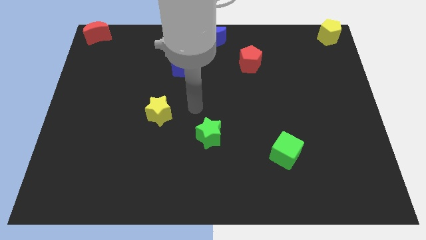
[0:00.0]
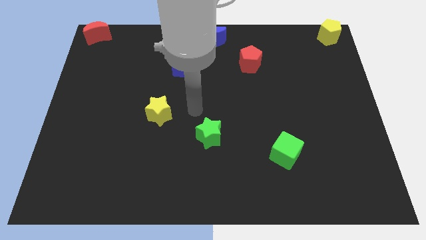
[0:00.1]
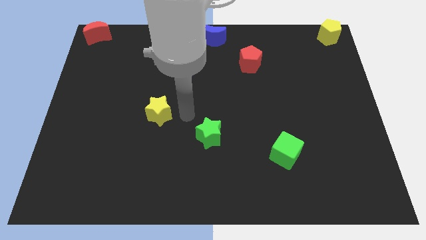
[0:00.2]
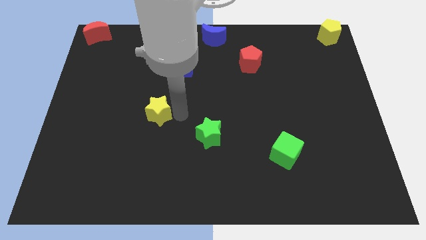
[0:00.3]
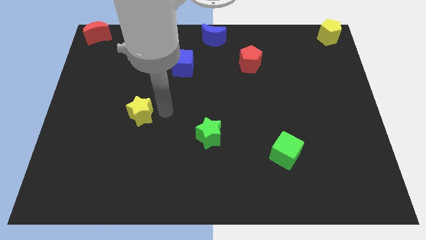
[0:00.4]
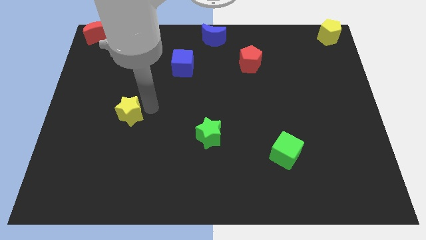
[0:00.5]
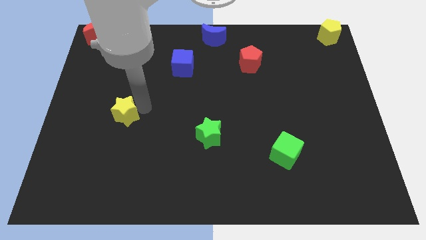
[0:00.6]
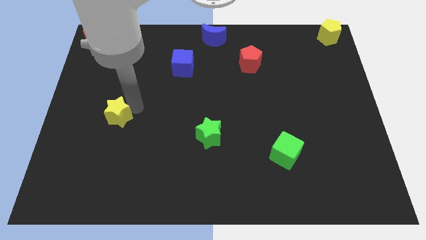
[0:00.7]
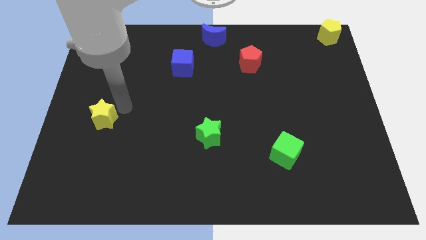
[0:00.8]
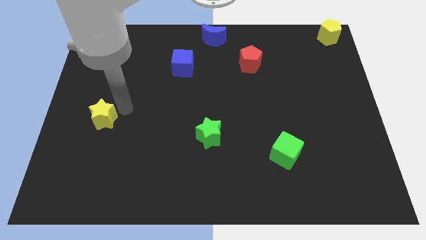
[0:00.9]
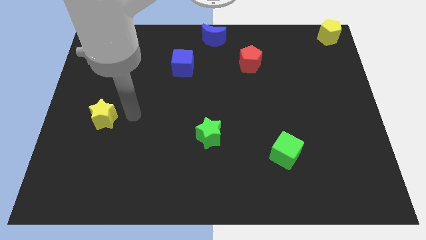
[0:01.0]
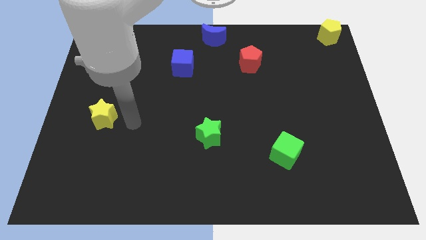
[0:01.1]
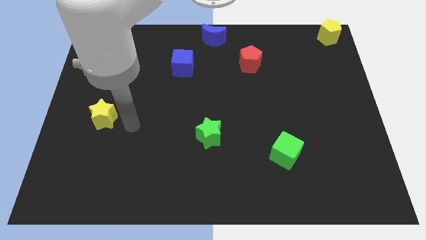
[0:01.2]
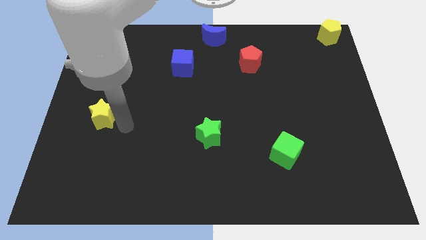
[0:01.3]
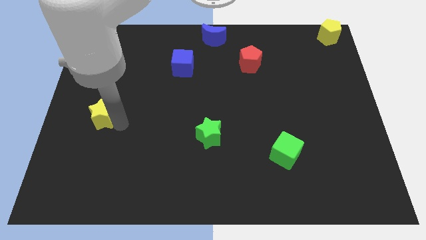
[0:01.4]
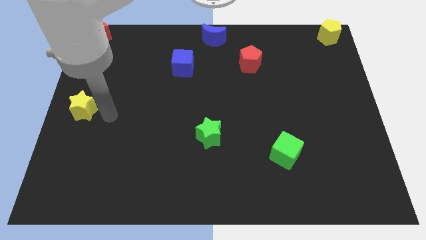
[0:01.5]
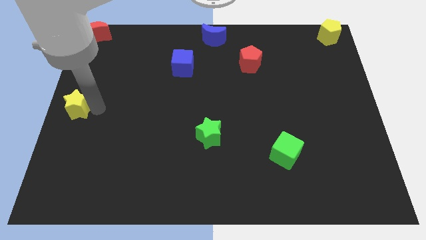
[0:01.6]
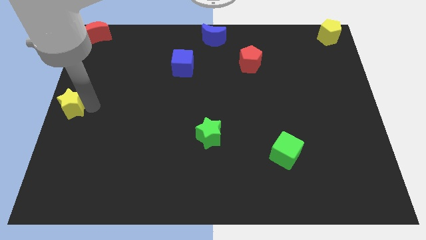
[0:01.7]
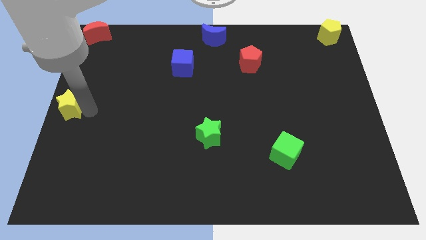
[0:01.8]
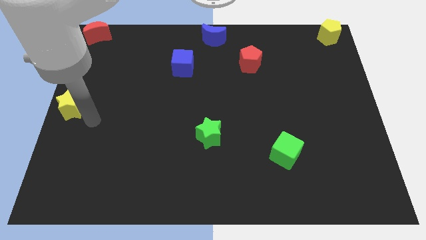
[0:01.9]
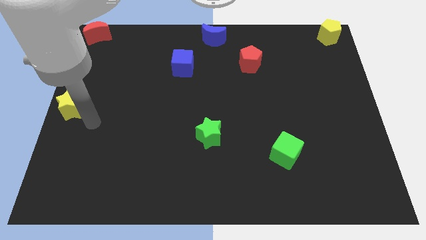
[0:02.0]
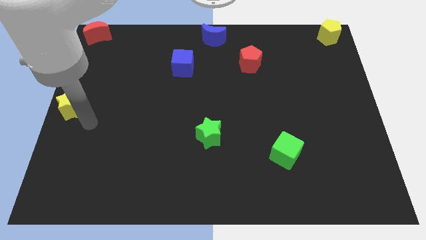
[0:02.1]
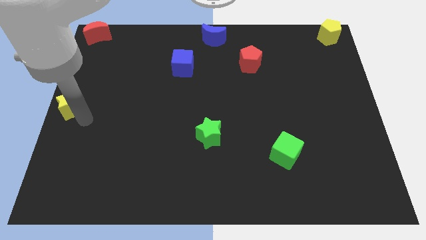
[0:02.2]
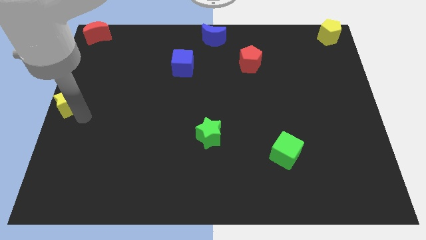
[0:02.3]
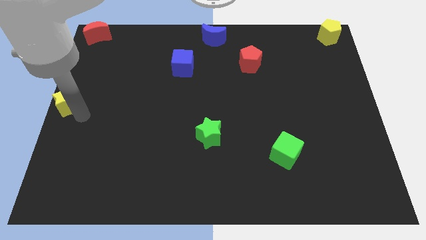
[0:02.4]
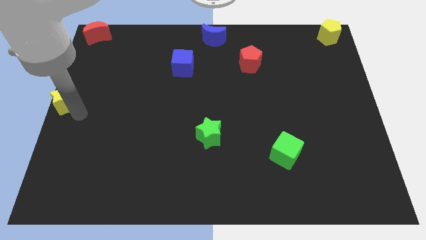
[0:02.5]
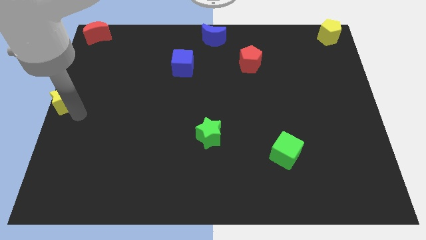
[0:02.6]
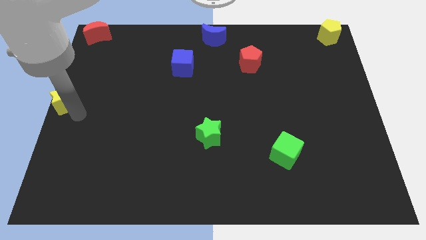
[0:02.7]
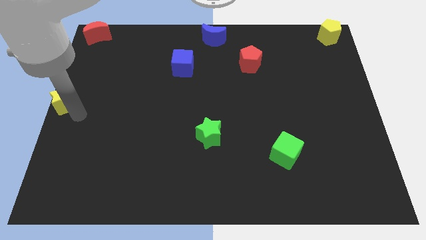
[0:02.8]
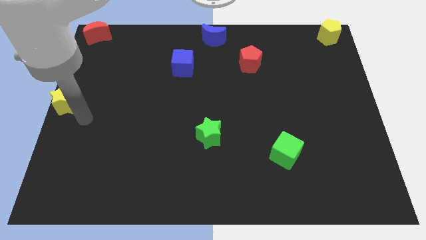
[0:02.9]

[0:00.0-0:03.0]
move the yellow star to the center left side of the board

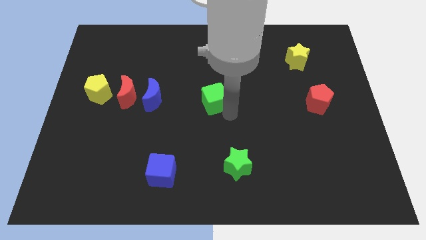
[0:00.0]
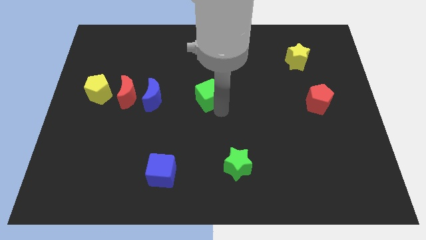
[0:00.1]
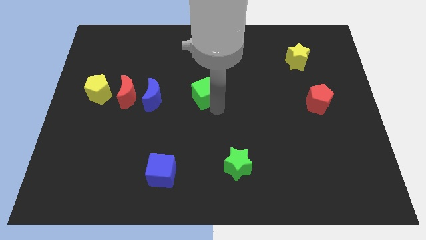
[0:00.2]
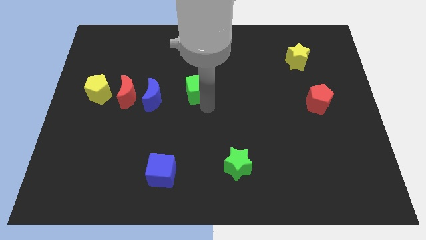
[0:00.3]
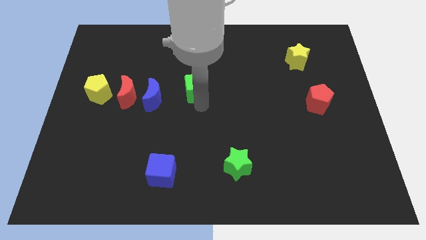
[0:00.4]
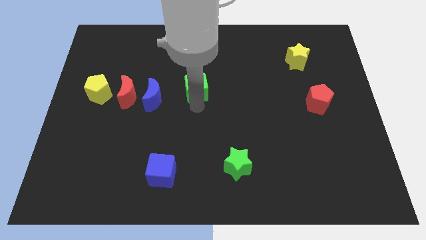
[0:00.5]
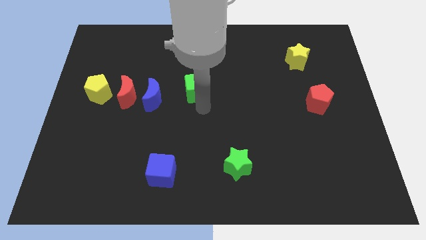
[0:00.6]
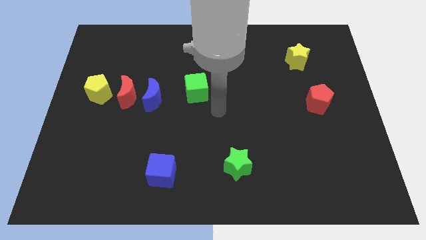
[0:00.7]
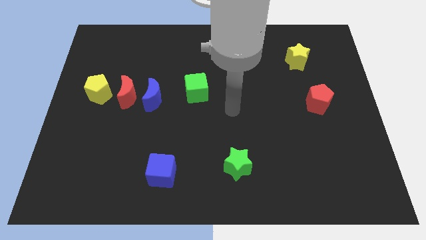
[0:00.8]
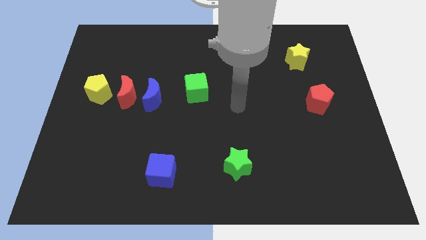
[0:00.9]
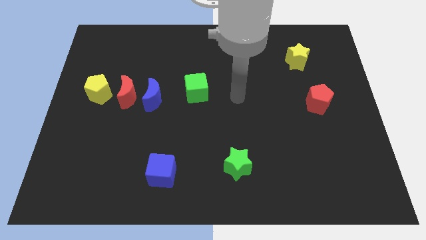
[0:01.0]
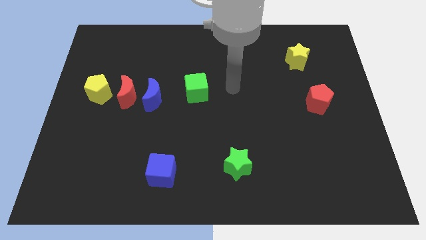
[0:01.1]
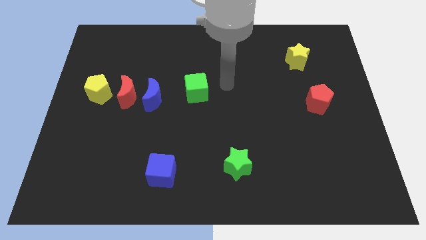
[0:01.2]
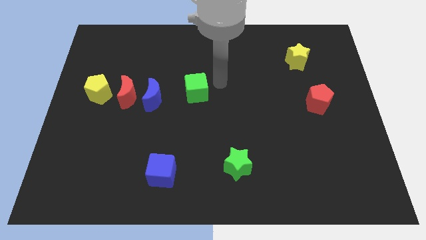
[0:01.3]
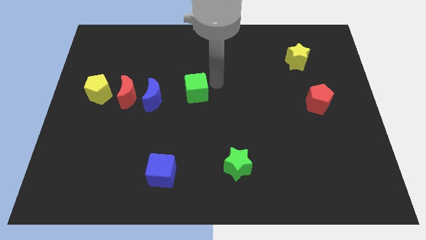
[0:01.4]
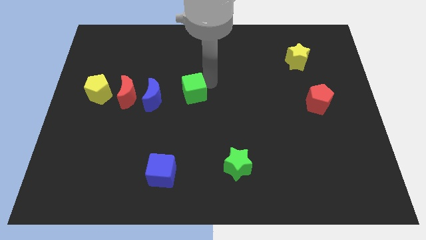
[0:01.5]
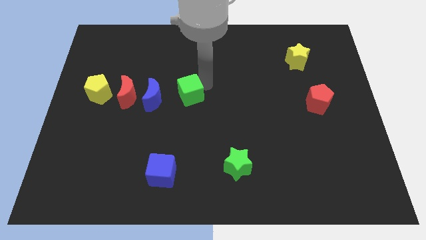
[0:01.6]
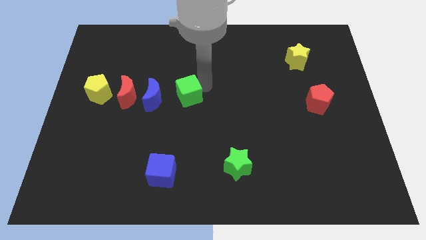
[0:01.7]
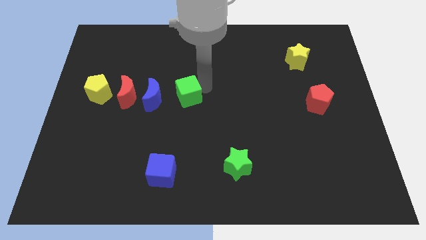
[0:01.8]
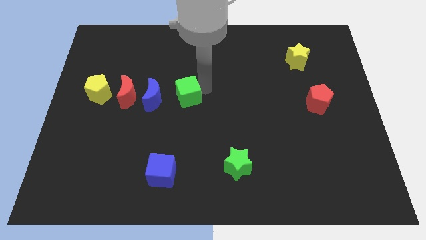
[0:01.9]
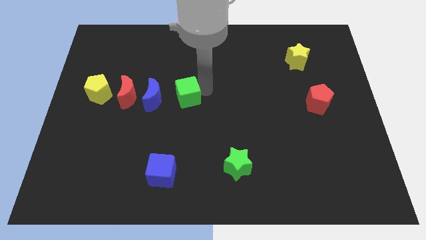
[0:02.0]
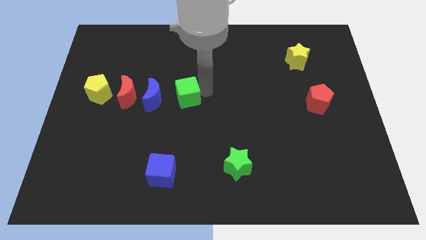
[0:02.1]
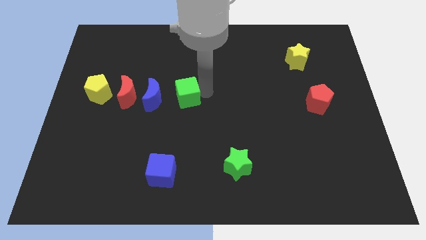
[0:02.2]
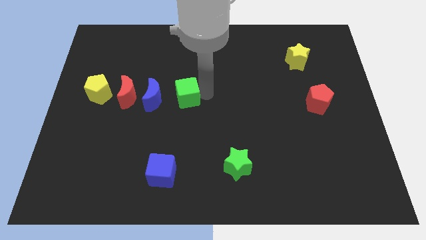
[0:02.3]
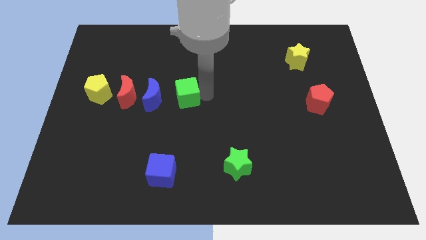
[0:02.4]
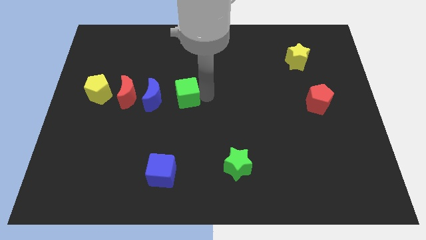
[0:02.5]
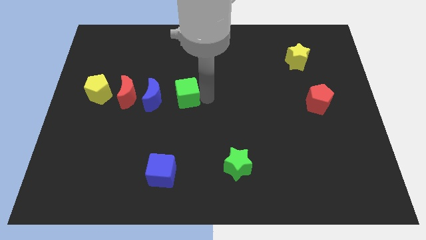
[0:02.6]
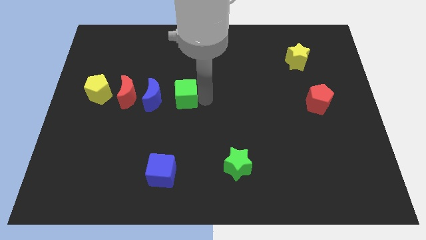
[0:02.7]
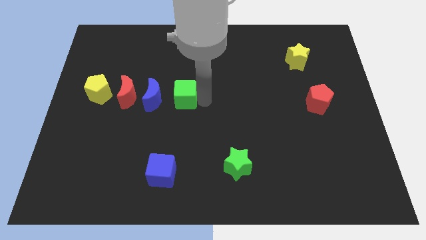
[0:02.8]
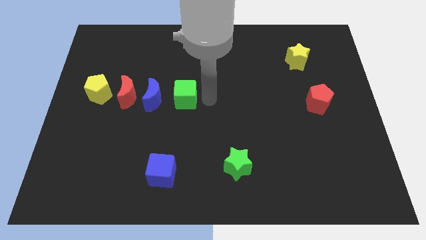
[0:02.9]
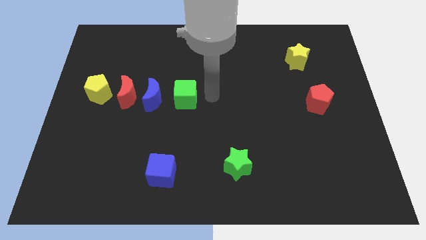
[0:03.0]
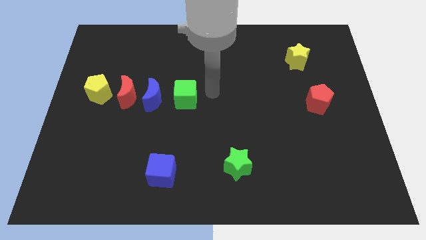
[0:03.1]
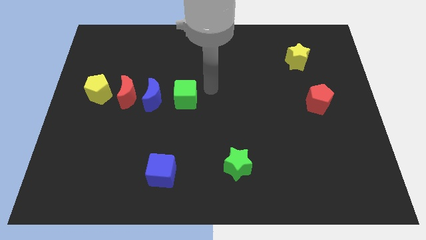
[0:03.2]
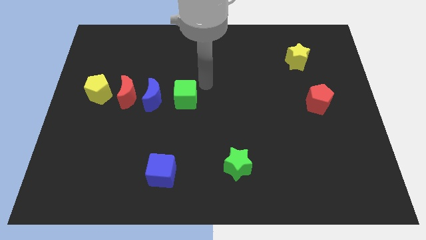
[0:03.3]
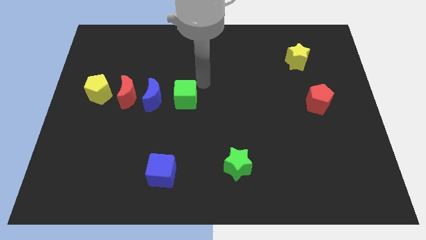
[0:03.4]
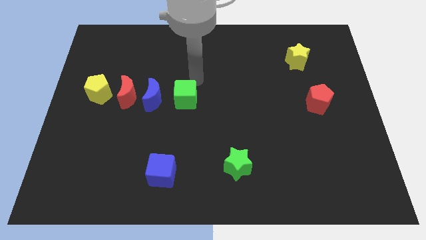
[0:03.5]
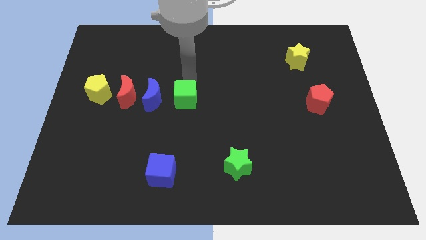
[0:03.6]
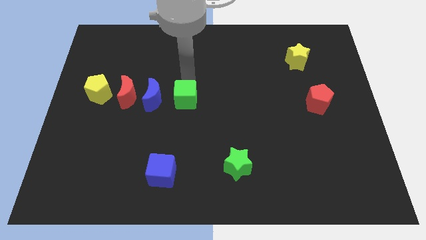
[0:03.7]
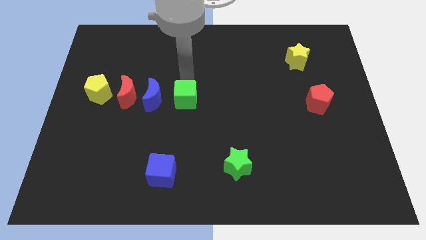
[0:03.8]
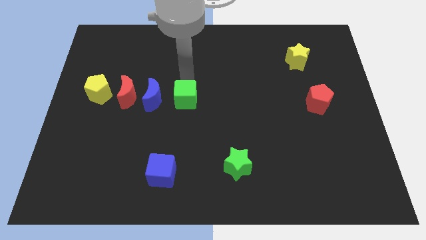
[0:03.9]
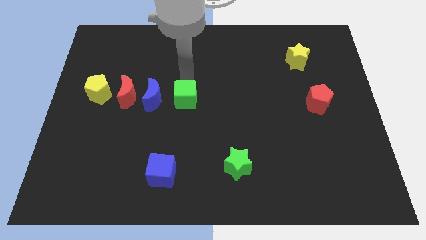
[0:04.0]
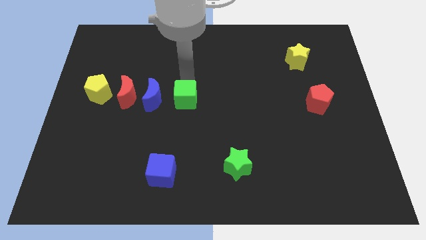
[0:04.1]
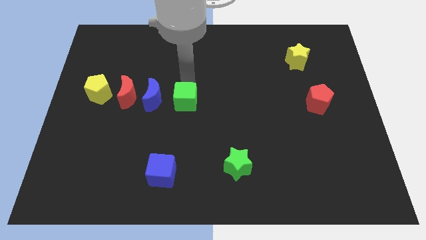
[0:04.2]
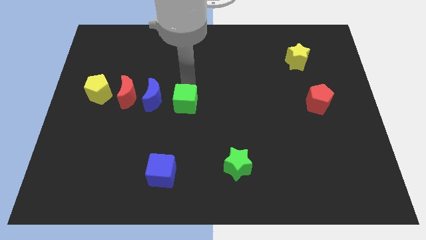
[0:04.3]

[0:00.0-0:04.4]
push the green cube to the right of blue moon

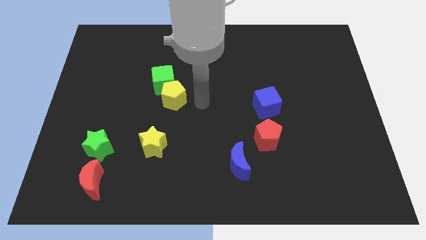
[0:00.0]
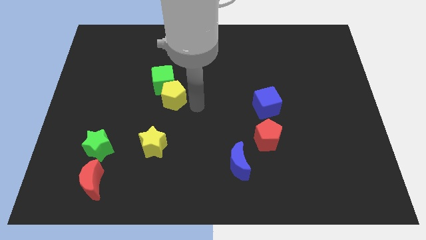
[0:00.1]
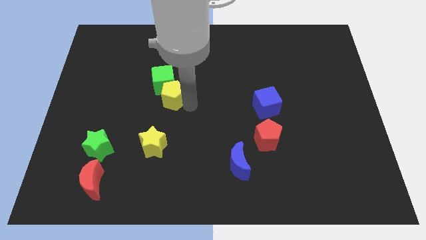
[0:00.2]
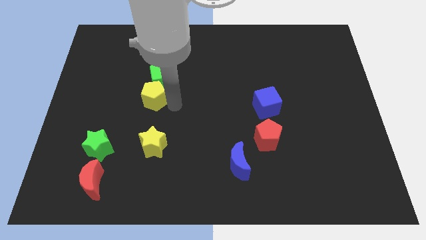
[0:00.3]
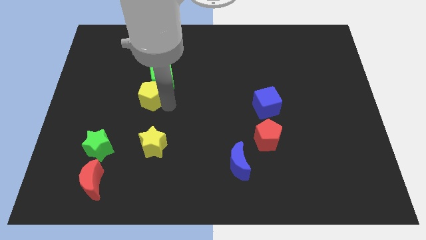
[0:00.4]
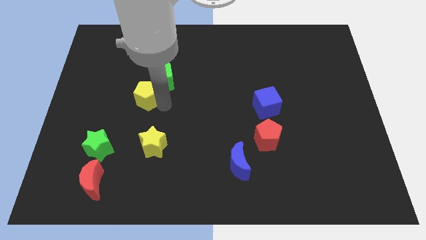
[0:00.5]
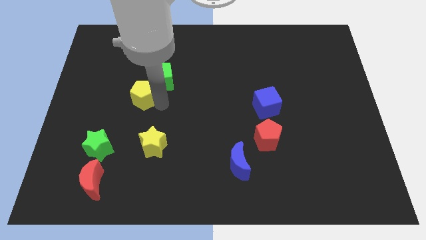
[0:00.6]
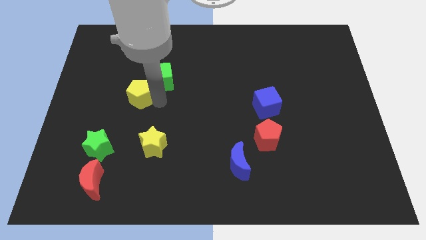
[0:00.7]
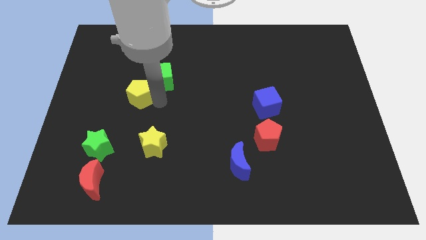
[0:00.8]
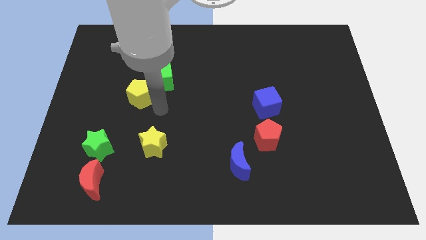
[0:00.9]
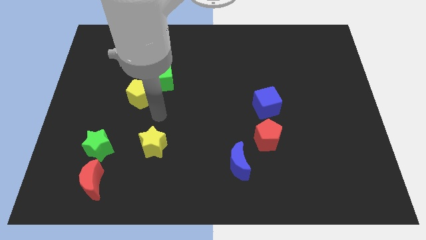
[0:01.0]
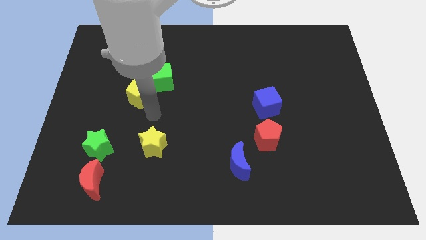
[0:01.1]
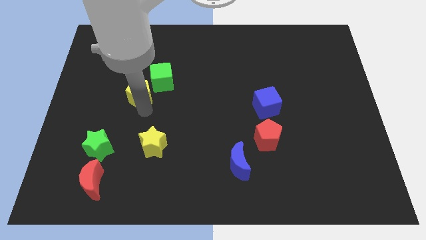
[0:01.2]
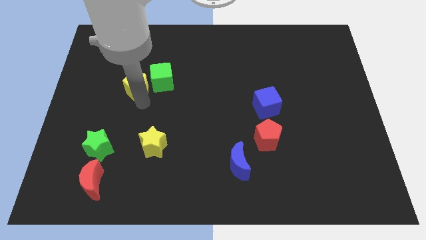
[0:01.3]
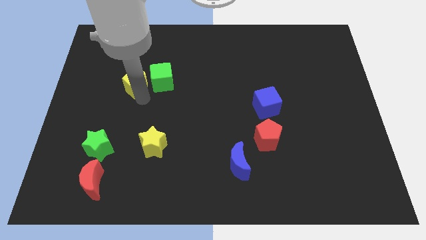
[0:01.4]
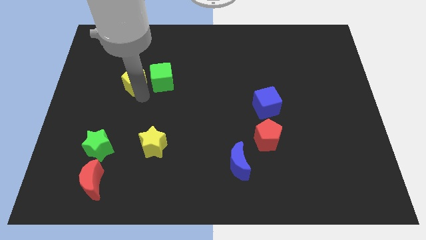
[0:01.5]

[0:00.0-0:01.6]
move the yellow pentagon left to the green cube

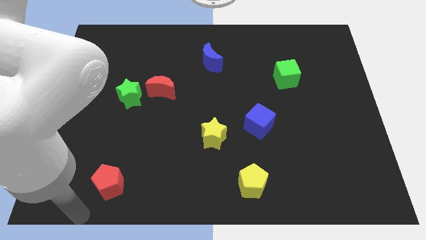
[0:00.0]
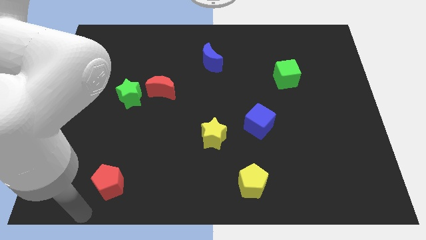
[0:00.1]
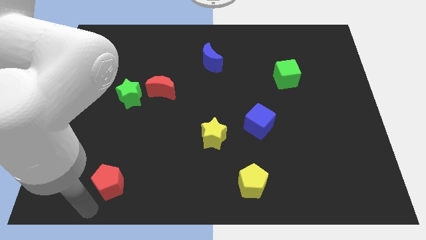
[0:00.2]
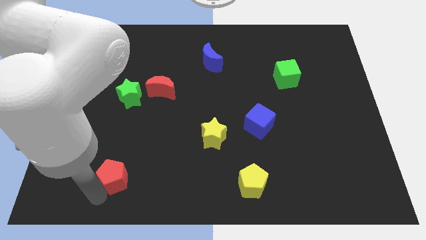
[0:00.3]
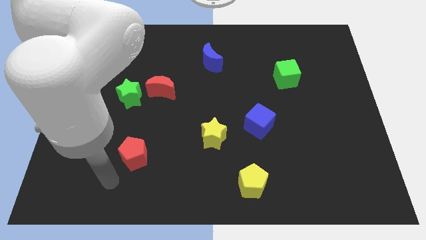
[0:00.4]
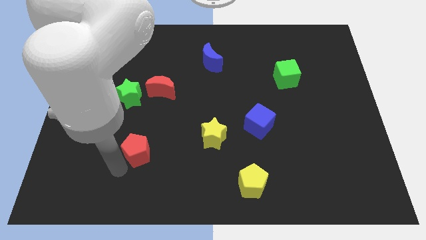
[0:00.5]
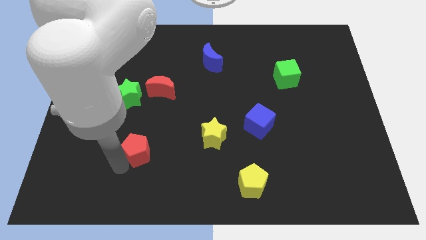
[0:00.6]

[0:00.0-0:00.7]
push the red pentagon to the top of the board
